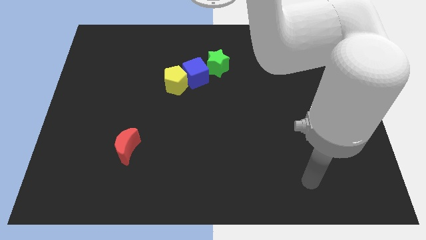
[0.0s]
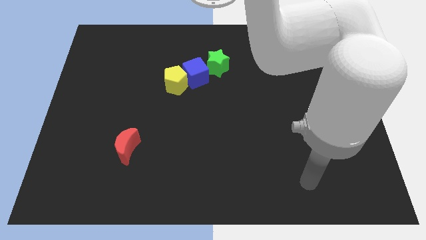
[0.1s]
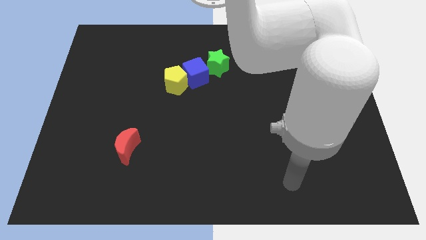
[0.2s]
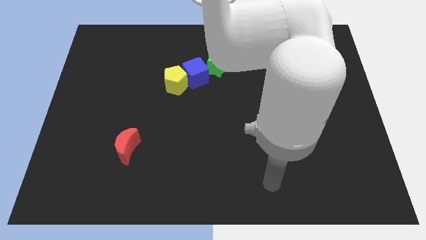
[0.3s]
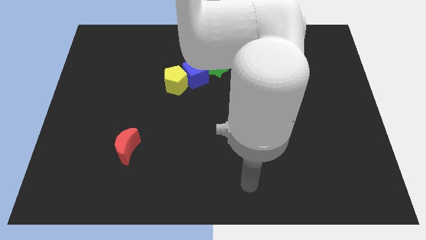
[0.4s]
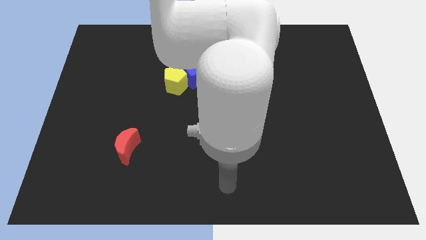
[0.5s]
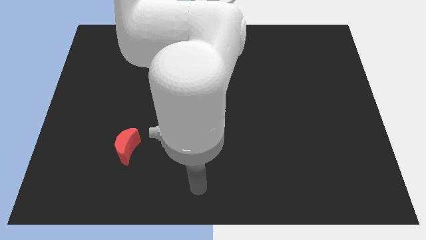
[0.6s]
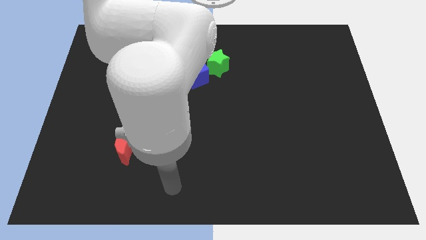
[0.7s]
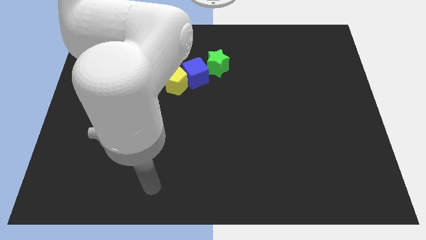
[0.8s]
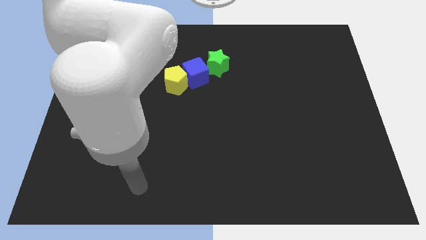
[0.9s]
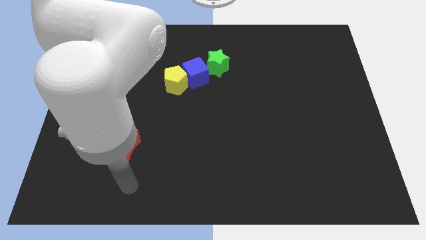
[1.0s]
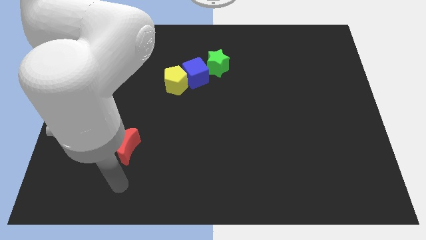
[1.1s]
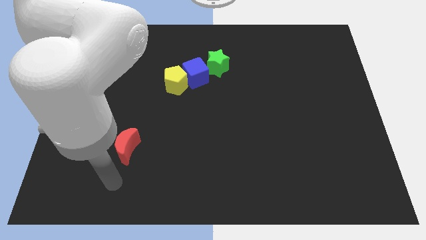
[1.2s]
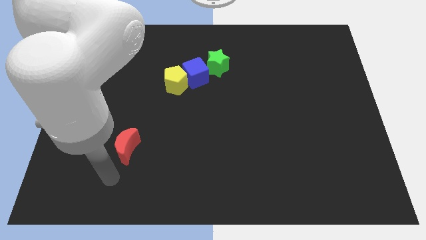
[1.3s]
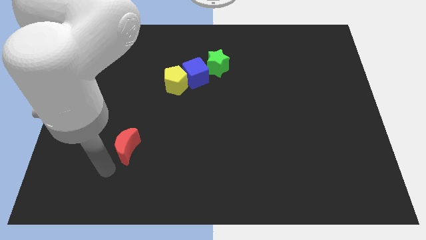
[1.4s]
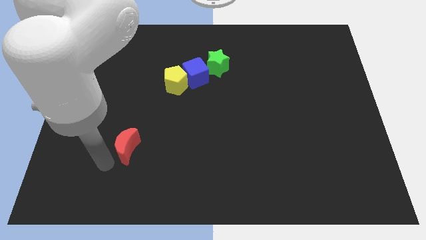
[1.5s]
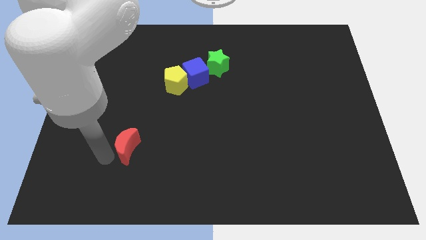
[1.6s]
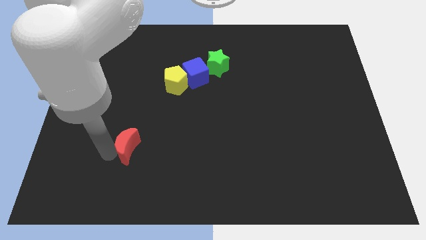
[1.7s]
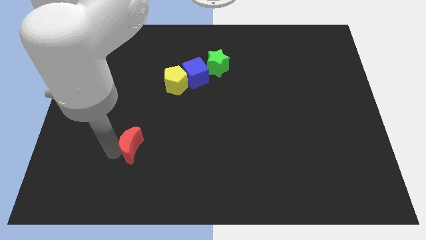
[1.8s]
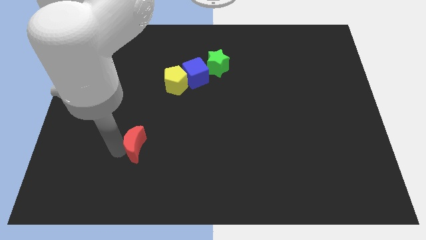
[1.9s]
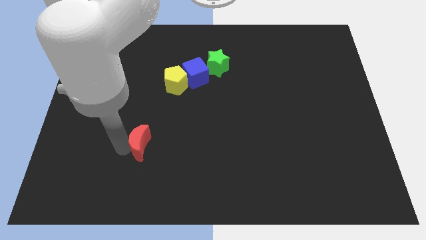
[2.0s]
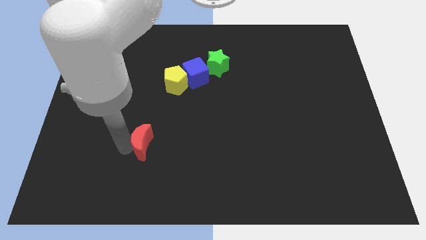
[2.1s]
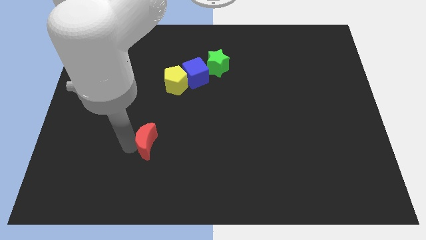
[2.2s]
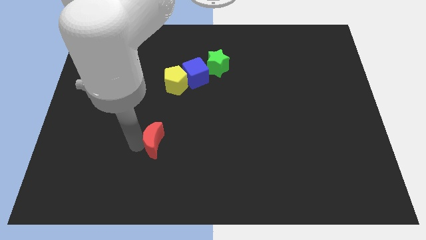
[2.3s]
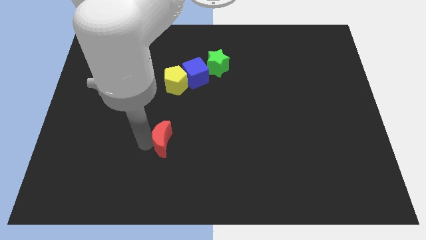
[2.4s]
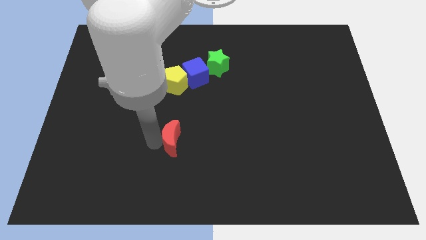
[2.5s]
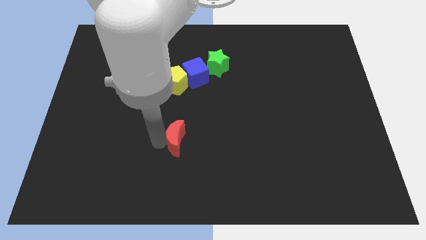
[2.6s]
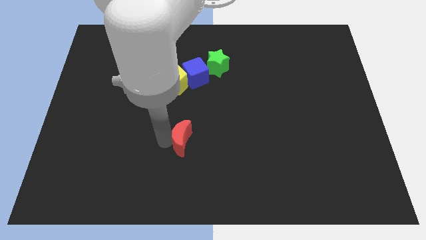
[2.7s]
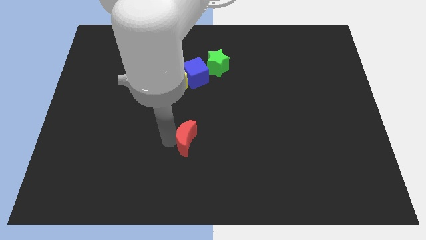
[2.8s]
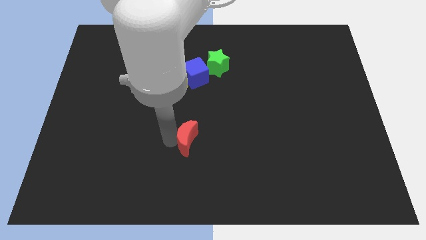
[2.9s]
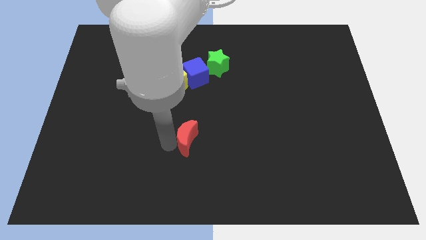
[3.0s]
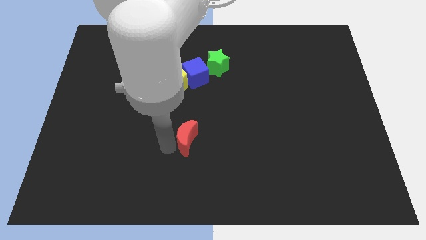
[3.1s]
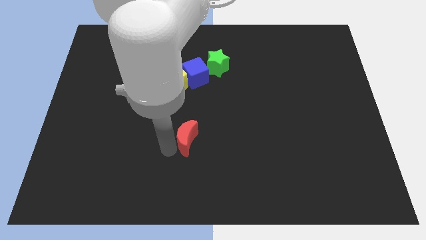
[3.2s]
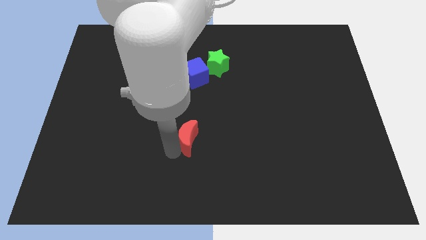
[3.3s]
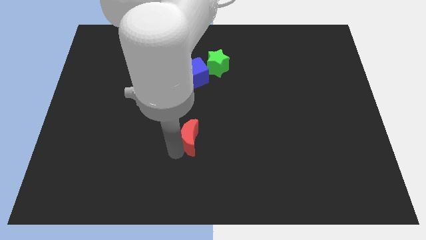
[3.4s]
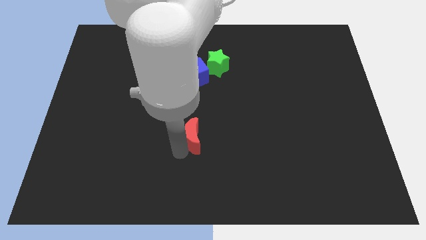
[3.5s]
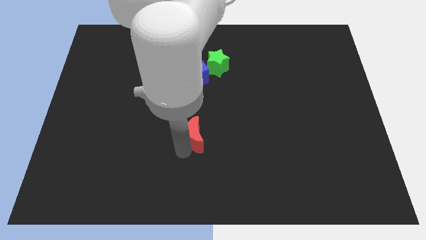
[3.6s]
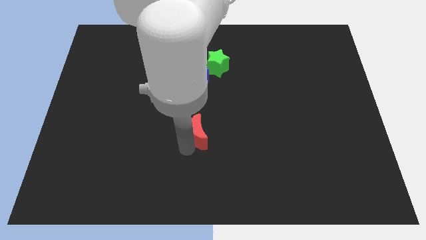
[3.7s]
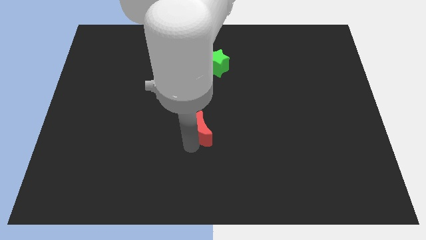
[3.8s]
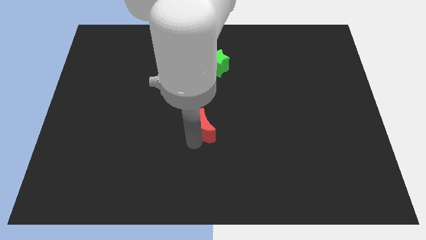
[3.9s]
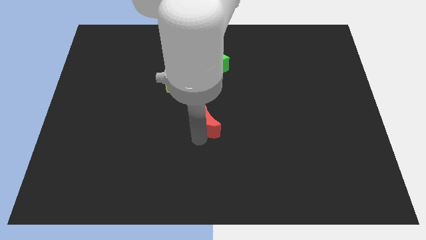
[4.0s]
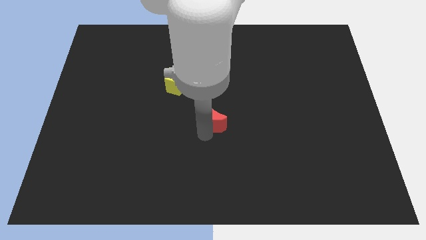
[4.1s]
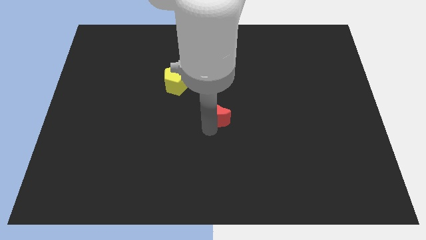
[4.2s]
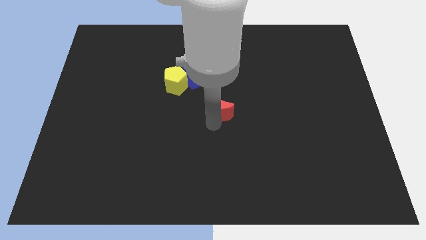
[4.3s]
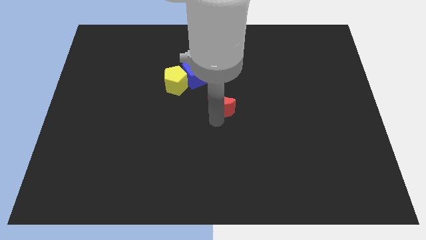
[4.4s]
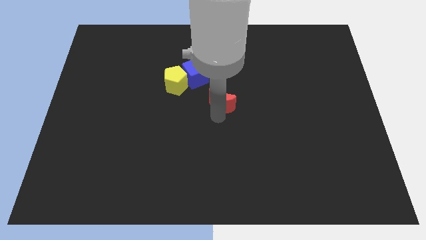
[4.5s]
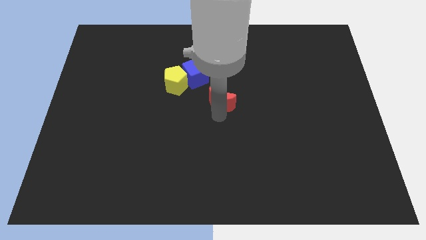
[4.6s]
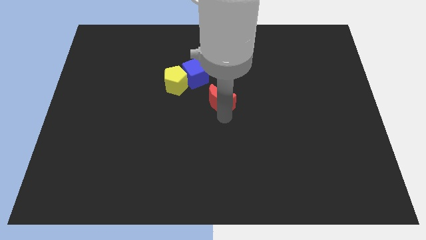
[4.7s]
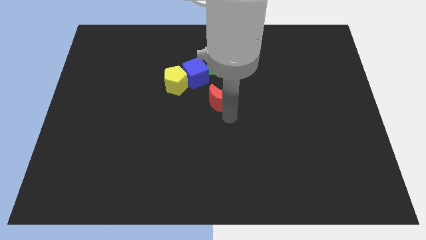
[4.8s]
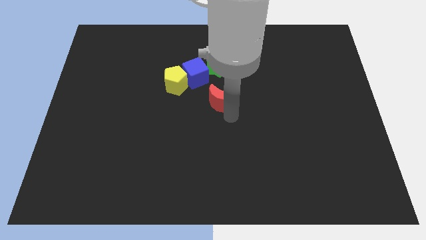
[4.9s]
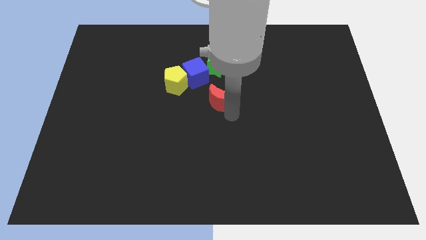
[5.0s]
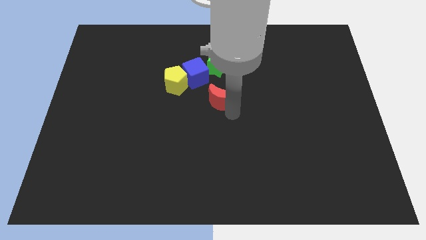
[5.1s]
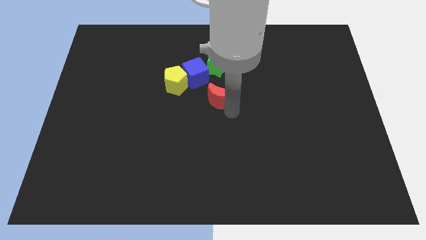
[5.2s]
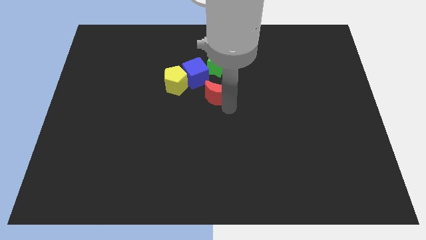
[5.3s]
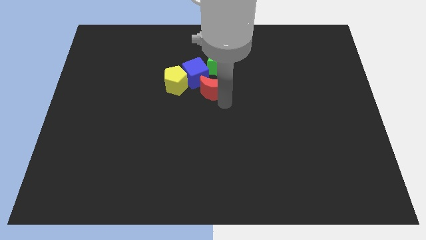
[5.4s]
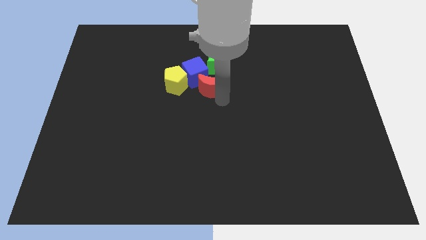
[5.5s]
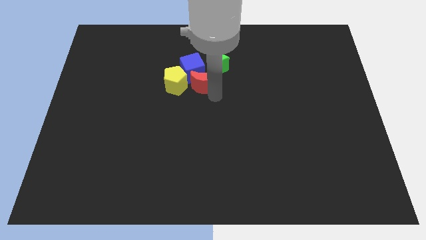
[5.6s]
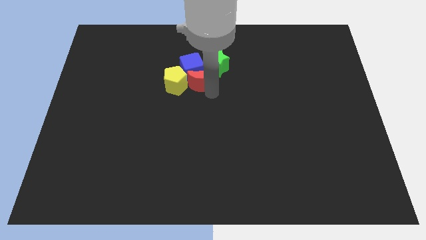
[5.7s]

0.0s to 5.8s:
slide the red block close to the blue cube

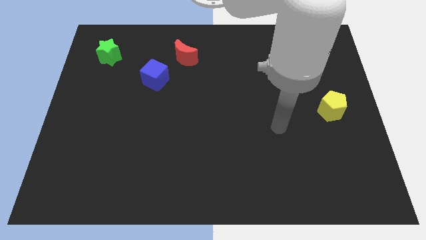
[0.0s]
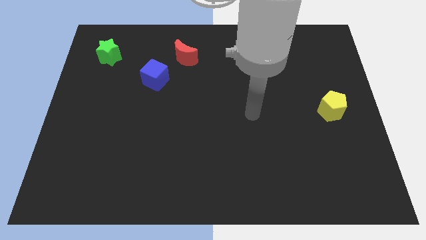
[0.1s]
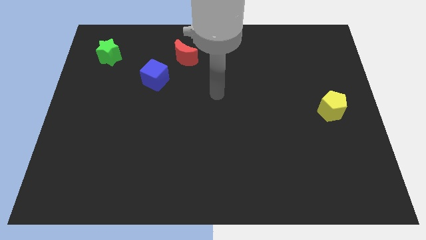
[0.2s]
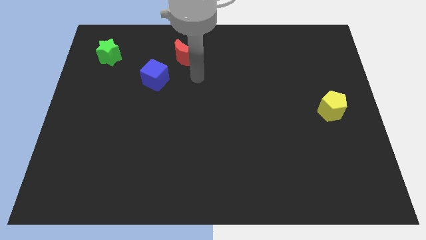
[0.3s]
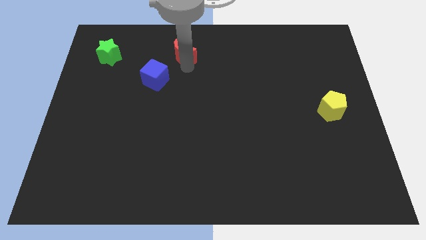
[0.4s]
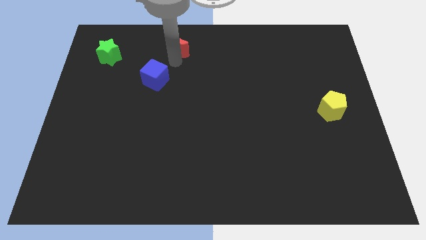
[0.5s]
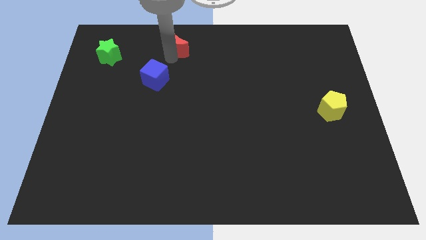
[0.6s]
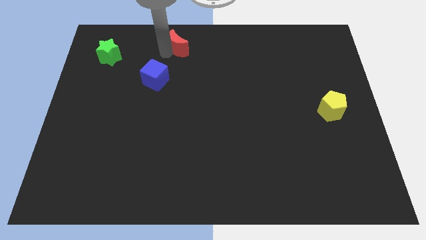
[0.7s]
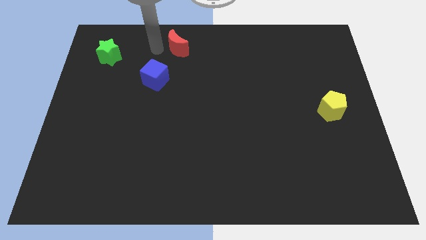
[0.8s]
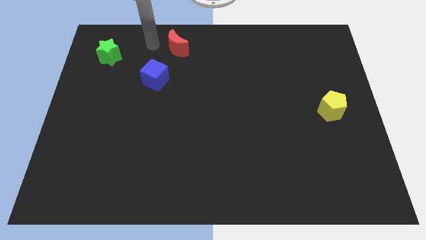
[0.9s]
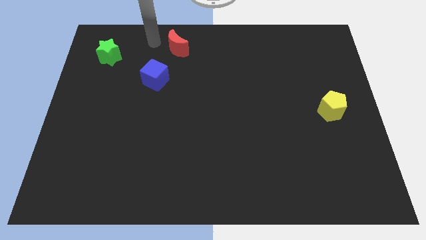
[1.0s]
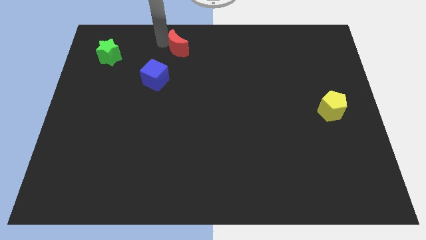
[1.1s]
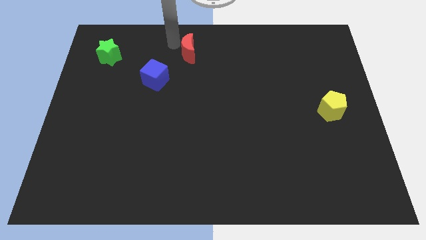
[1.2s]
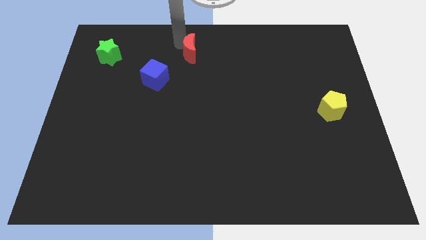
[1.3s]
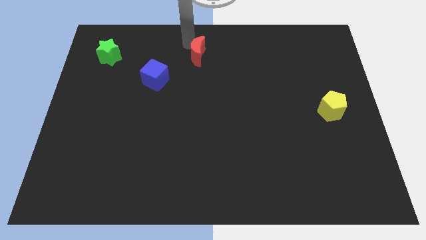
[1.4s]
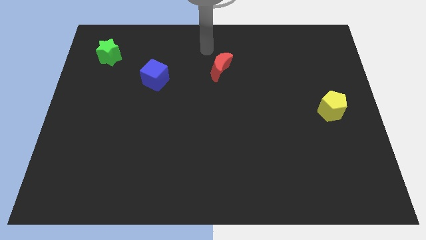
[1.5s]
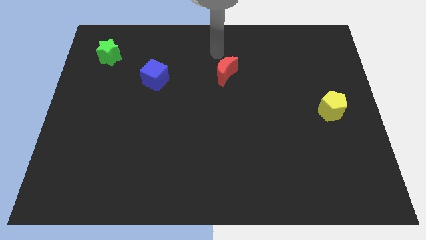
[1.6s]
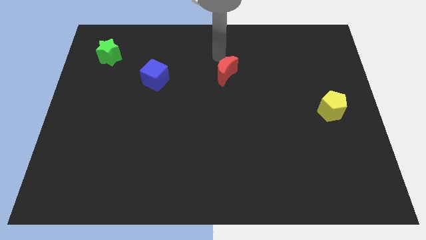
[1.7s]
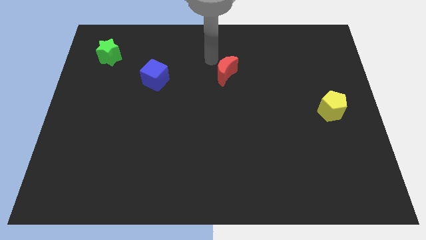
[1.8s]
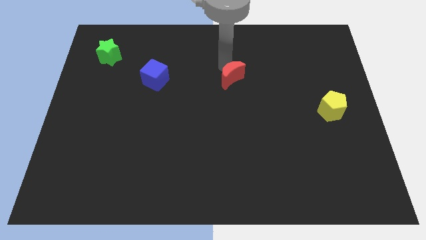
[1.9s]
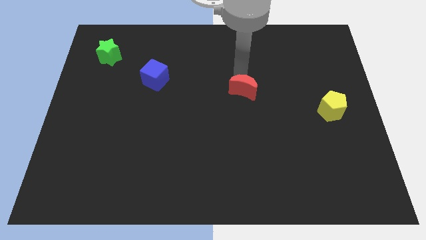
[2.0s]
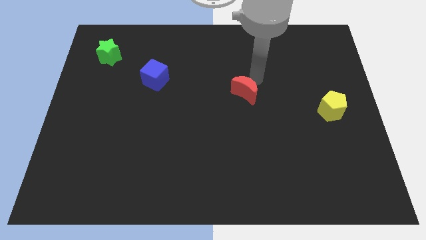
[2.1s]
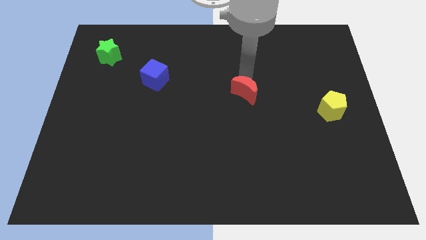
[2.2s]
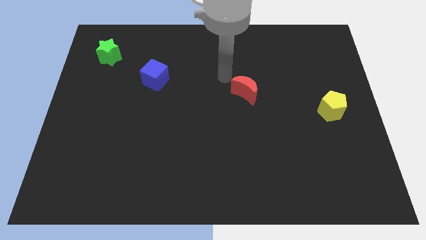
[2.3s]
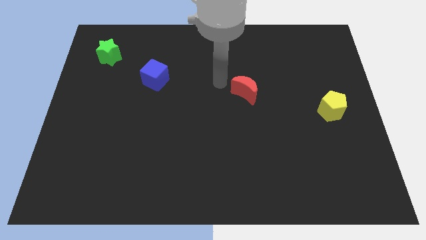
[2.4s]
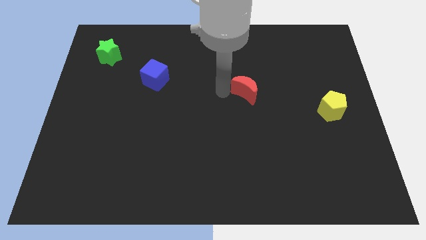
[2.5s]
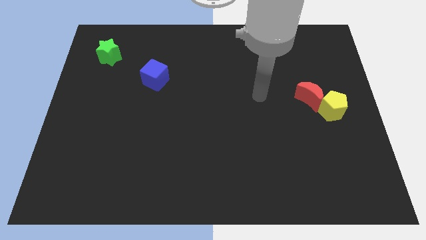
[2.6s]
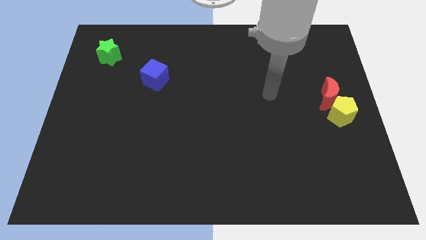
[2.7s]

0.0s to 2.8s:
slide the moon towards the pentagon
